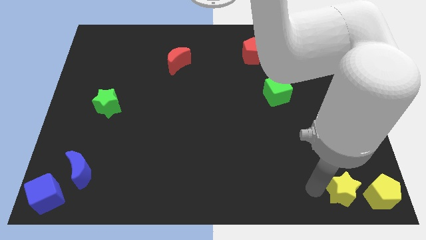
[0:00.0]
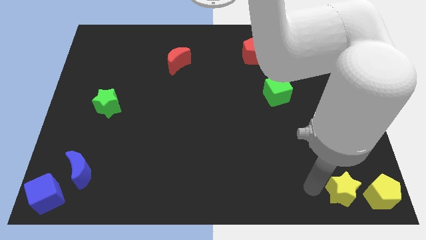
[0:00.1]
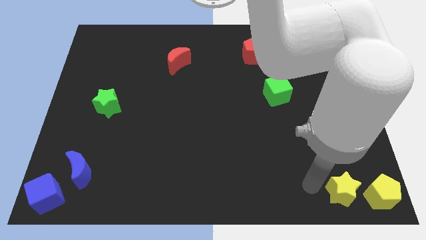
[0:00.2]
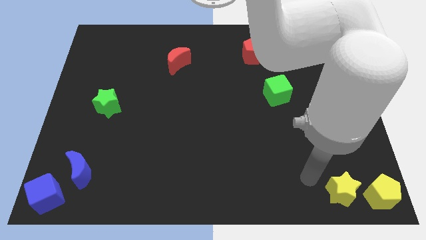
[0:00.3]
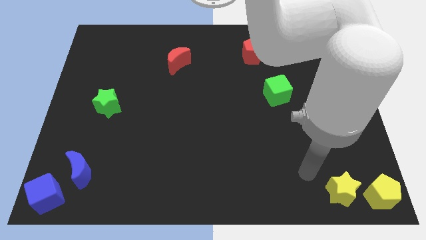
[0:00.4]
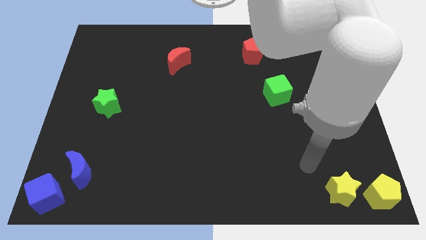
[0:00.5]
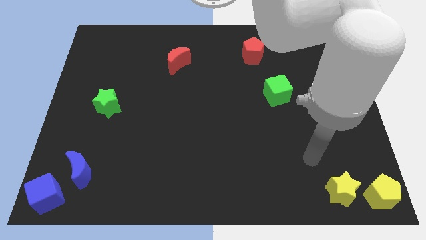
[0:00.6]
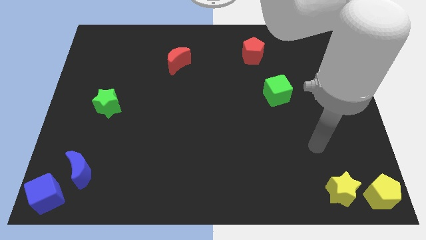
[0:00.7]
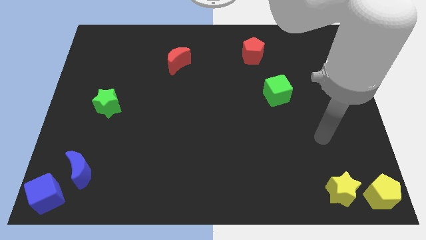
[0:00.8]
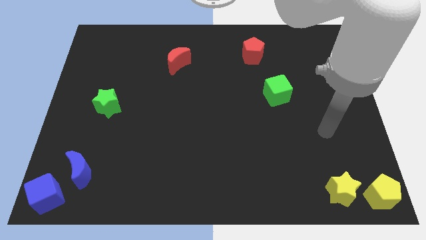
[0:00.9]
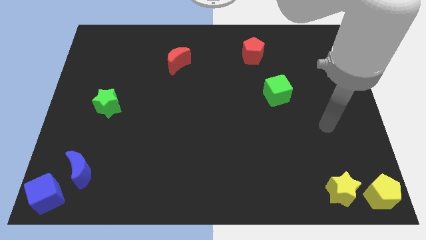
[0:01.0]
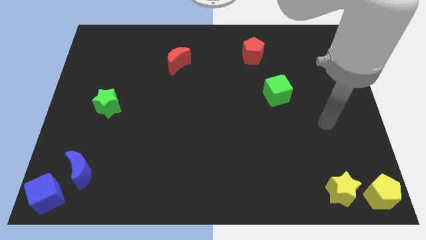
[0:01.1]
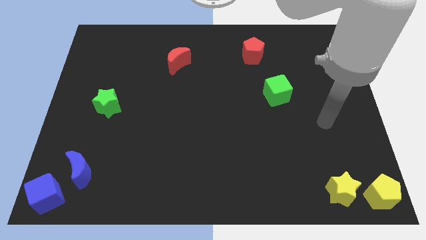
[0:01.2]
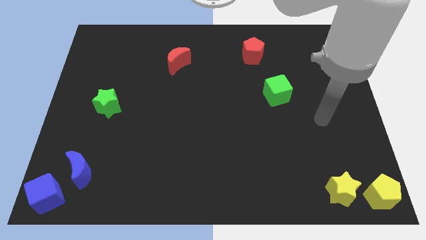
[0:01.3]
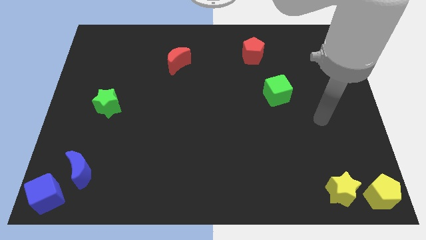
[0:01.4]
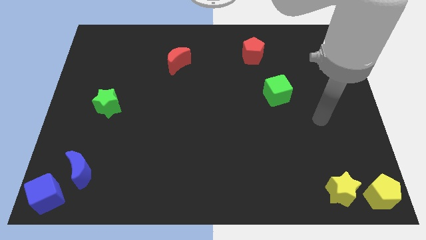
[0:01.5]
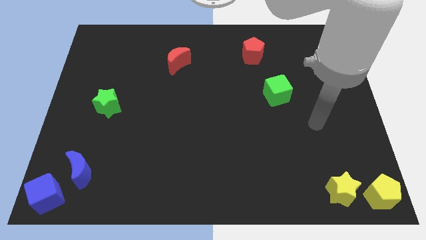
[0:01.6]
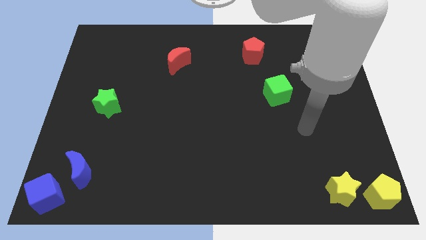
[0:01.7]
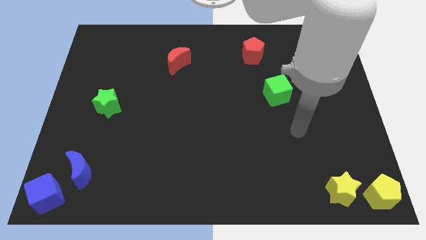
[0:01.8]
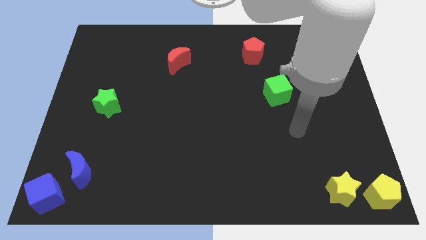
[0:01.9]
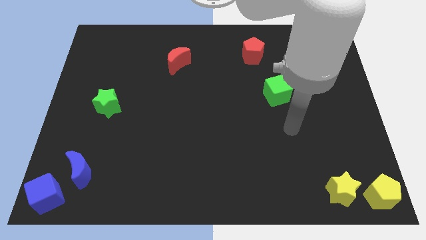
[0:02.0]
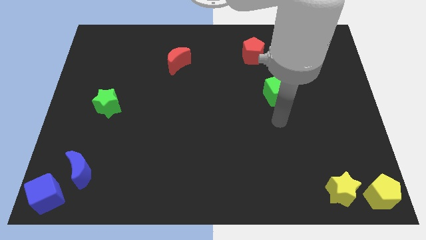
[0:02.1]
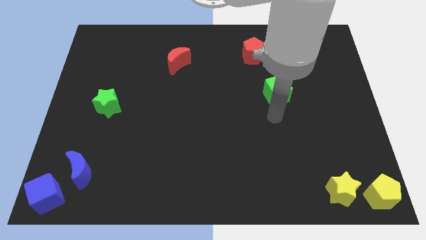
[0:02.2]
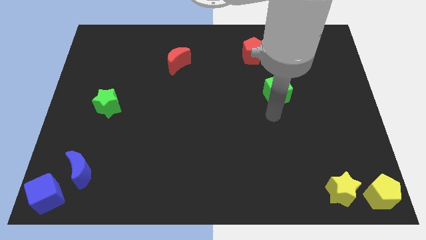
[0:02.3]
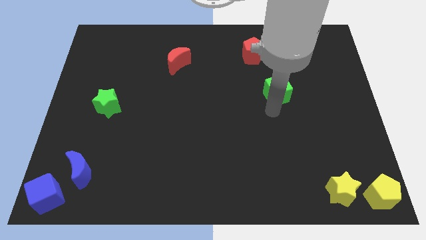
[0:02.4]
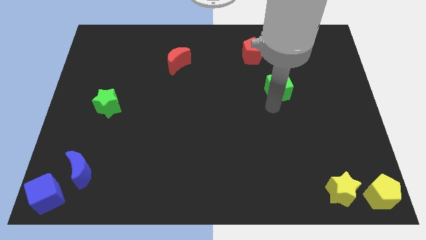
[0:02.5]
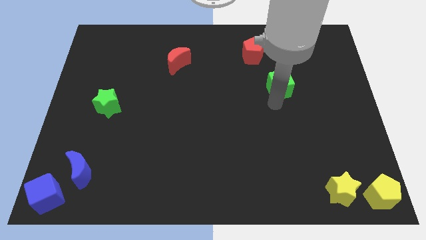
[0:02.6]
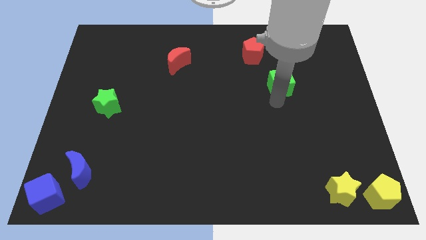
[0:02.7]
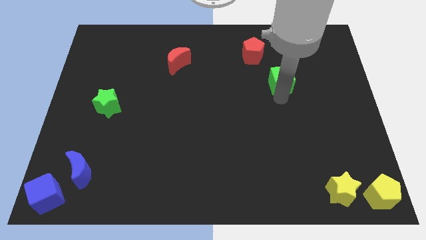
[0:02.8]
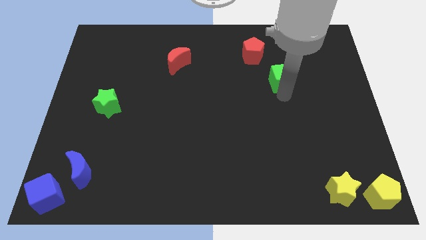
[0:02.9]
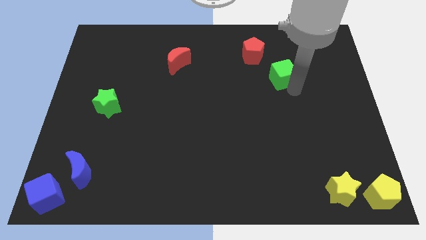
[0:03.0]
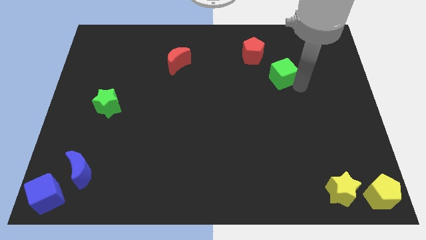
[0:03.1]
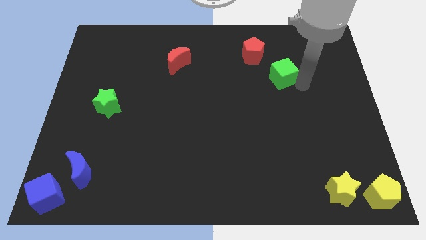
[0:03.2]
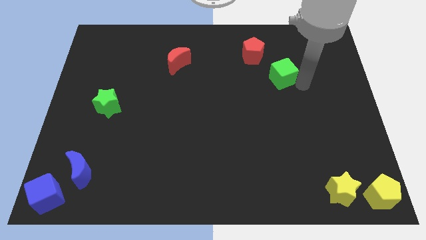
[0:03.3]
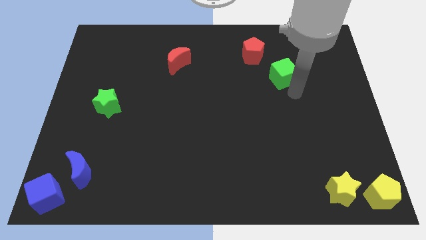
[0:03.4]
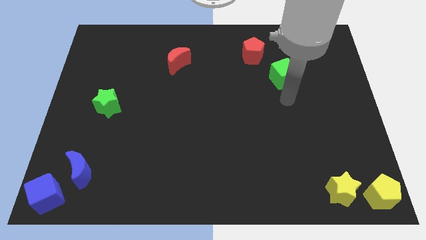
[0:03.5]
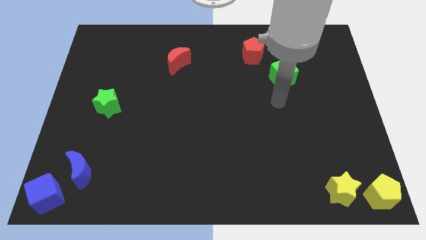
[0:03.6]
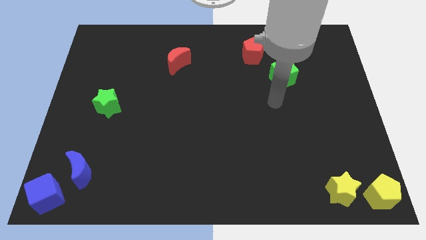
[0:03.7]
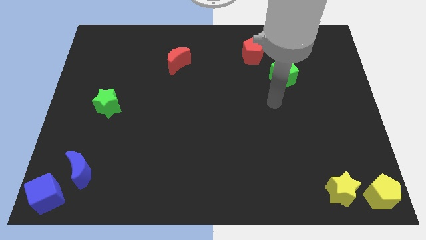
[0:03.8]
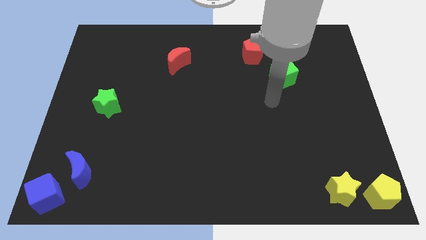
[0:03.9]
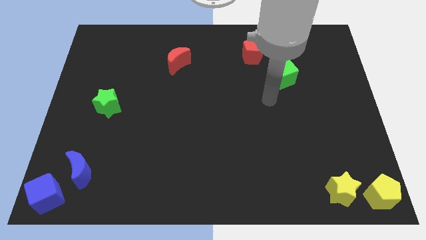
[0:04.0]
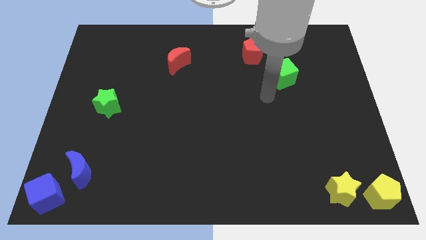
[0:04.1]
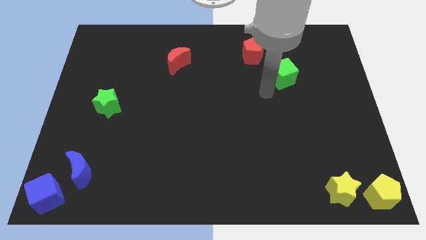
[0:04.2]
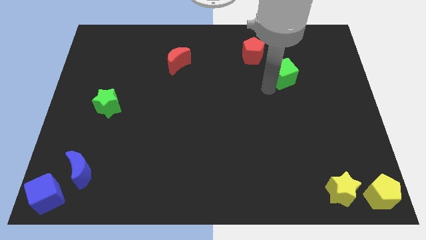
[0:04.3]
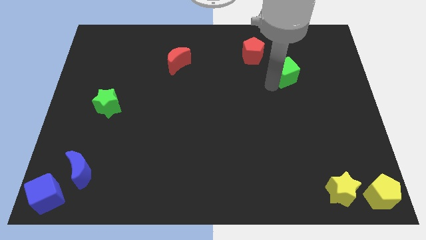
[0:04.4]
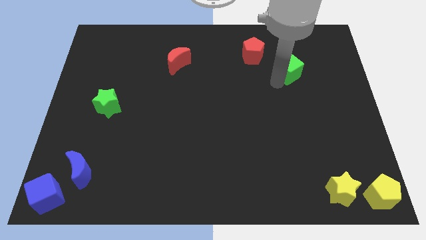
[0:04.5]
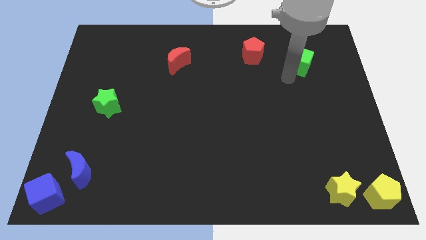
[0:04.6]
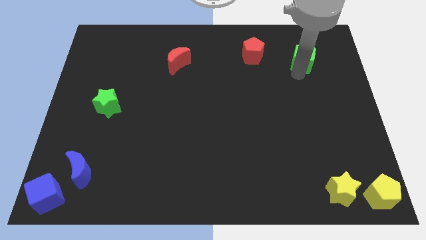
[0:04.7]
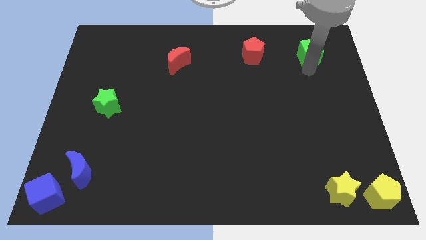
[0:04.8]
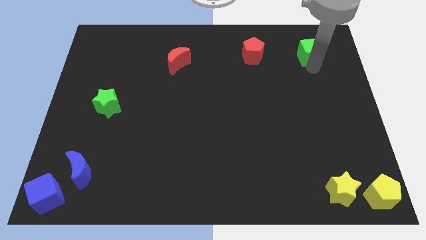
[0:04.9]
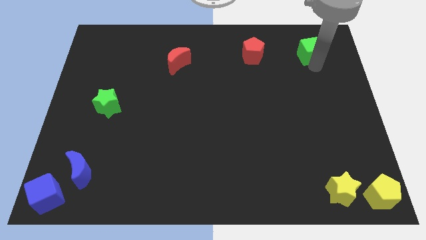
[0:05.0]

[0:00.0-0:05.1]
put the green cube vertically above the yellow star

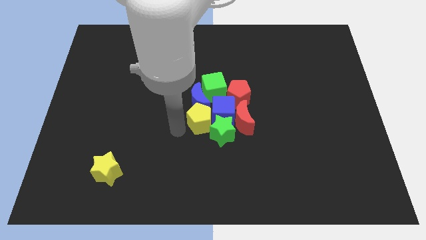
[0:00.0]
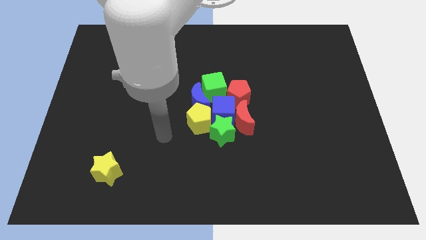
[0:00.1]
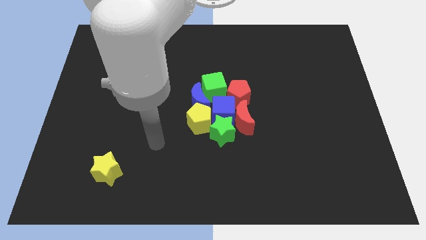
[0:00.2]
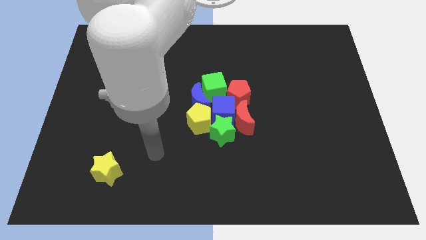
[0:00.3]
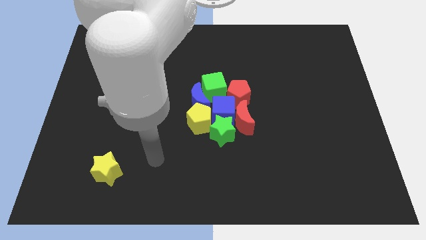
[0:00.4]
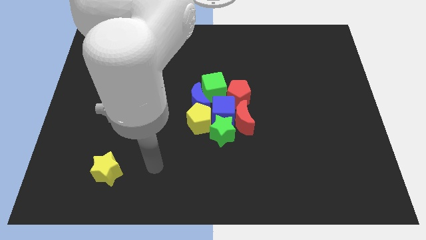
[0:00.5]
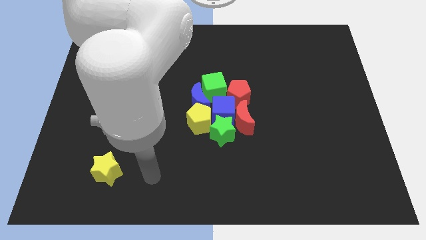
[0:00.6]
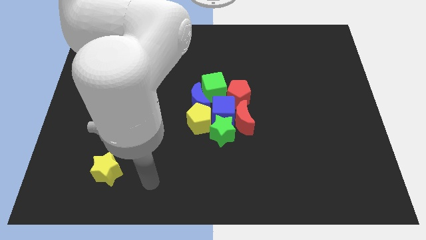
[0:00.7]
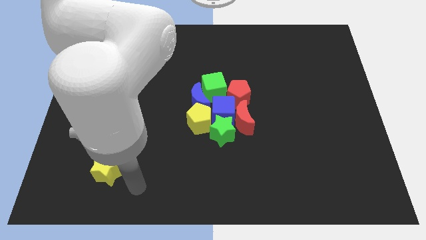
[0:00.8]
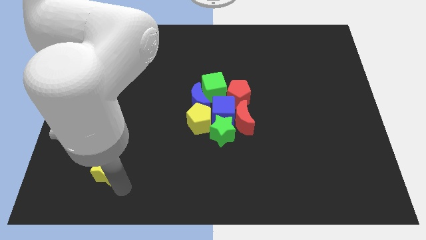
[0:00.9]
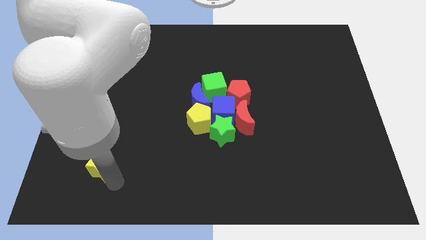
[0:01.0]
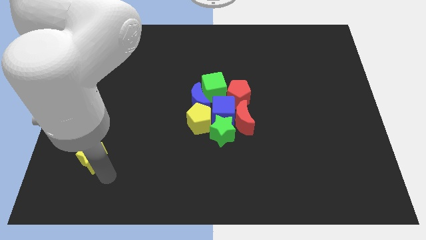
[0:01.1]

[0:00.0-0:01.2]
move your arm away from the yellow pentagon

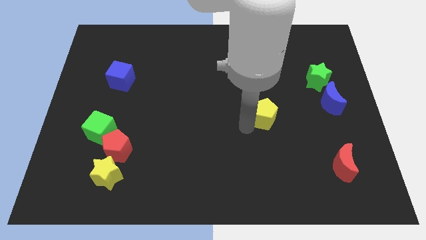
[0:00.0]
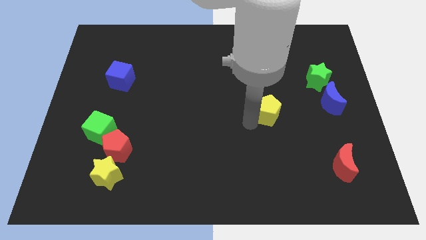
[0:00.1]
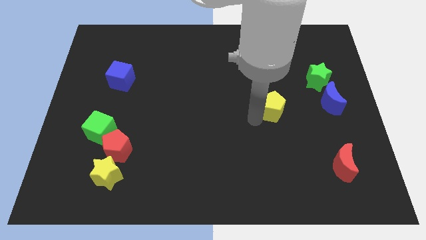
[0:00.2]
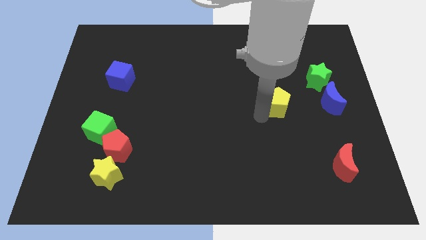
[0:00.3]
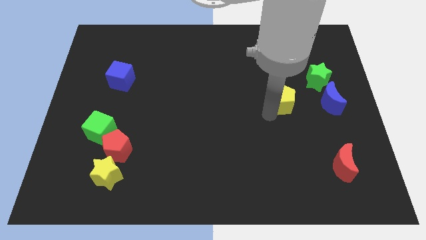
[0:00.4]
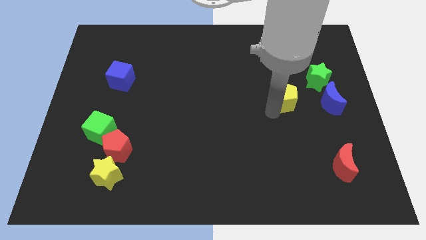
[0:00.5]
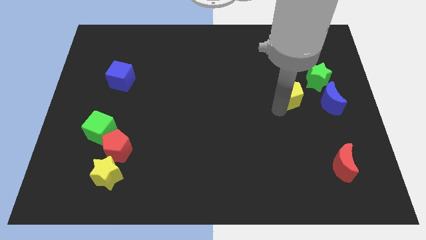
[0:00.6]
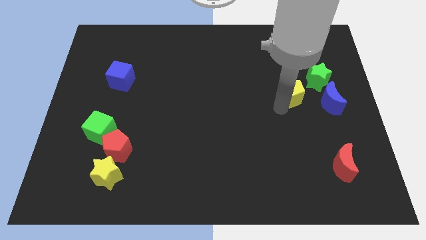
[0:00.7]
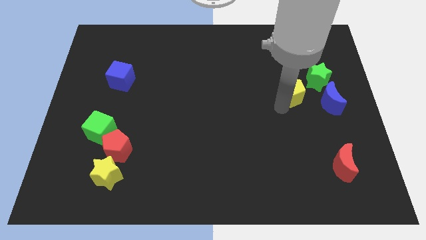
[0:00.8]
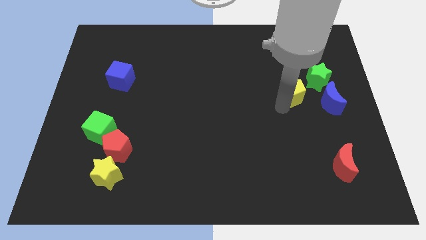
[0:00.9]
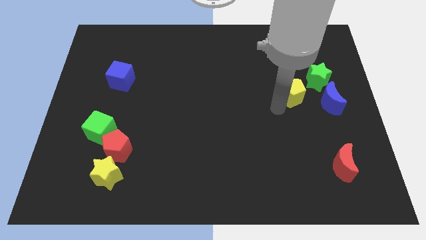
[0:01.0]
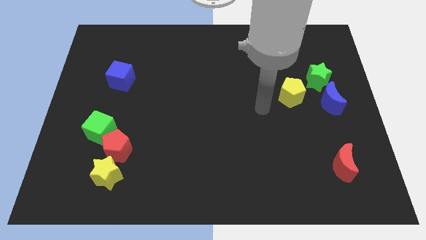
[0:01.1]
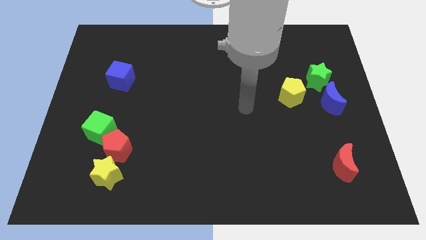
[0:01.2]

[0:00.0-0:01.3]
push the yellow pentagon towards the green star

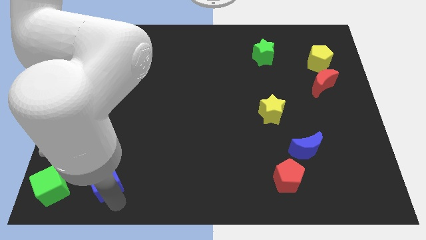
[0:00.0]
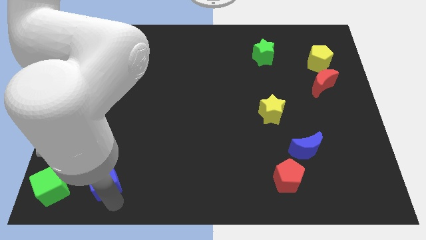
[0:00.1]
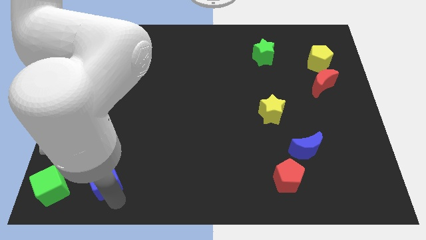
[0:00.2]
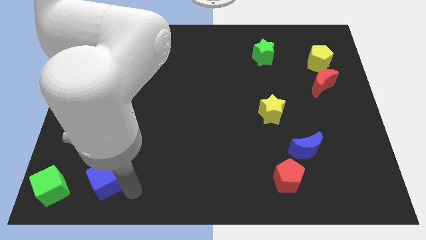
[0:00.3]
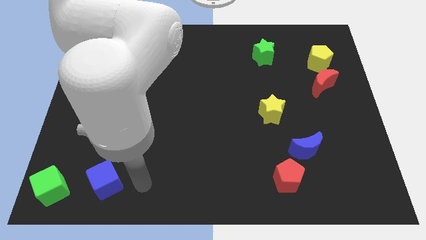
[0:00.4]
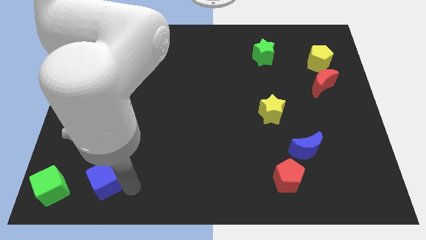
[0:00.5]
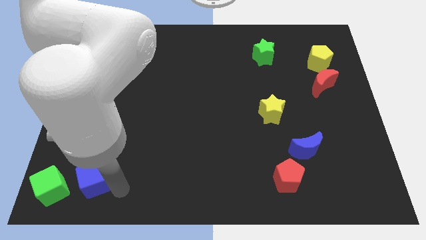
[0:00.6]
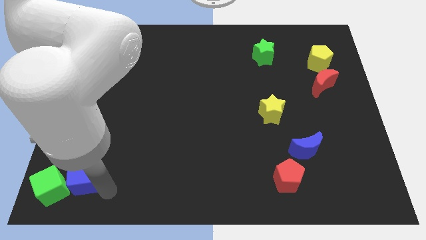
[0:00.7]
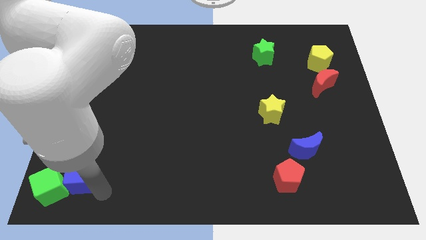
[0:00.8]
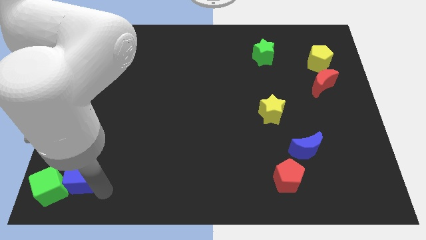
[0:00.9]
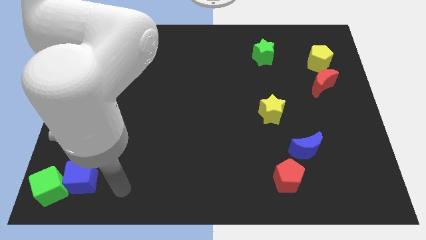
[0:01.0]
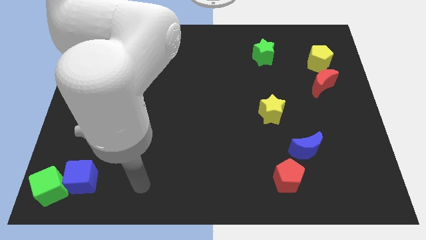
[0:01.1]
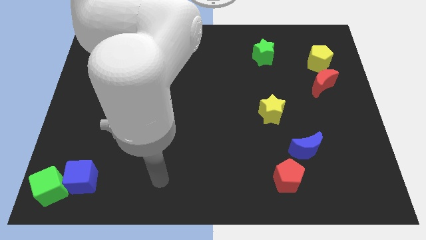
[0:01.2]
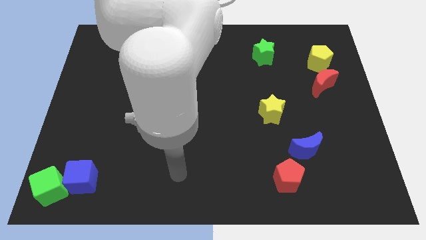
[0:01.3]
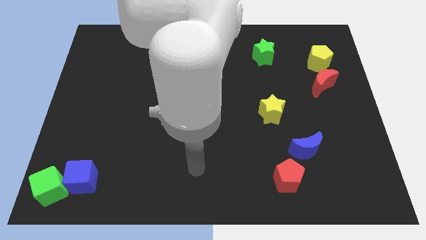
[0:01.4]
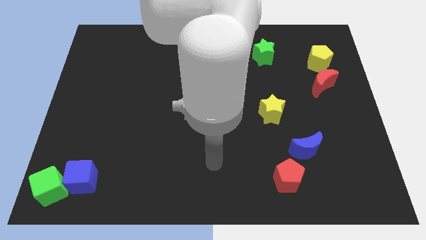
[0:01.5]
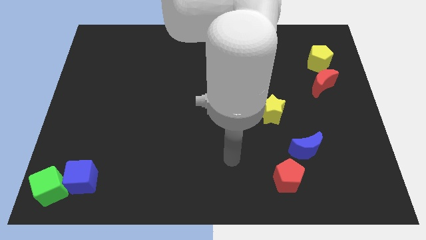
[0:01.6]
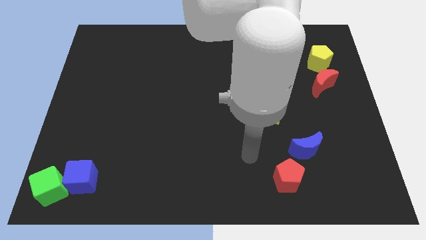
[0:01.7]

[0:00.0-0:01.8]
move the blue cube to the right of the green cube
